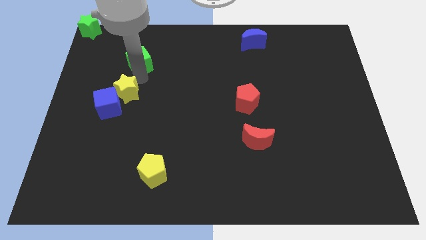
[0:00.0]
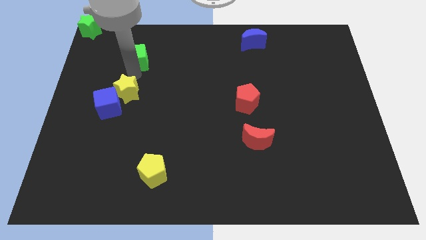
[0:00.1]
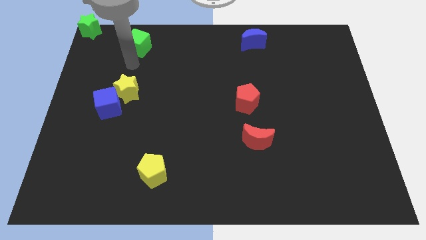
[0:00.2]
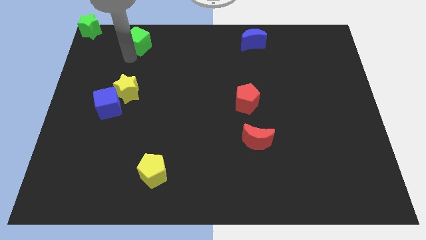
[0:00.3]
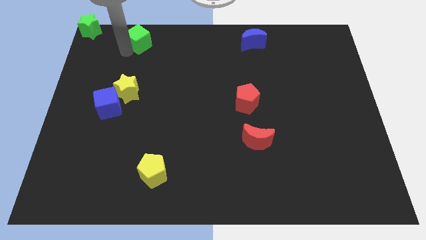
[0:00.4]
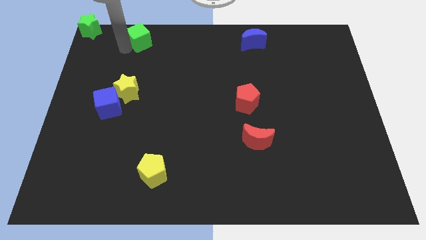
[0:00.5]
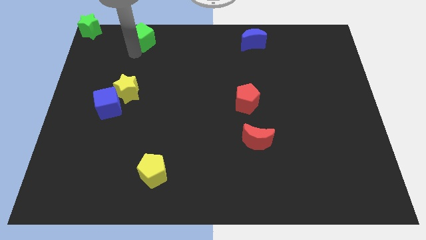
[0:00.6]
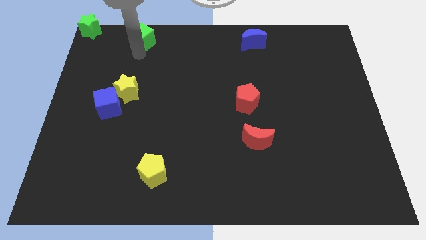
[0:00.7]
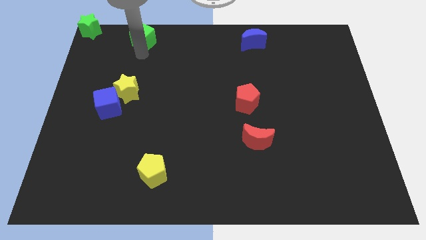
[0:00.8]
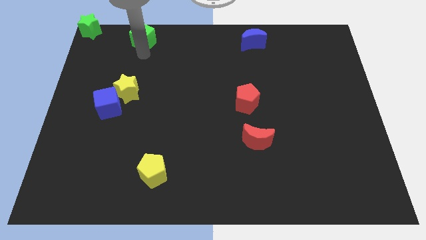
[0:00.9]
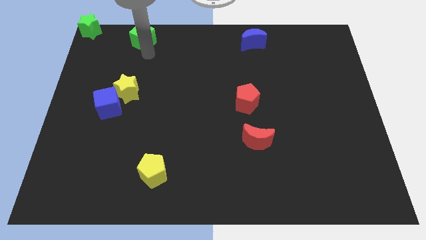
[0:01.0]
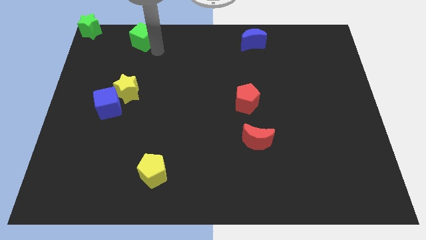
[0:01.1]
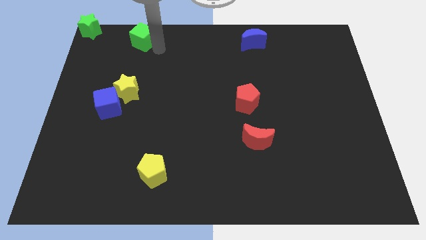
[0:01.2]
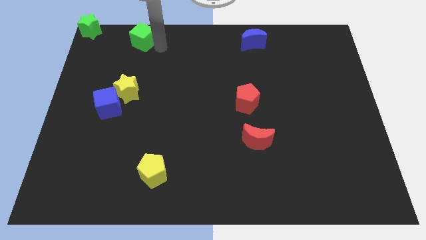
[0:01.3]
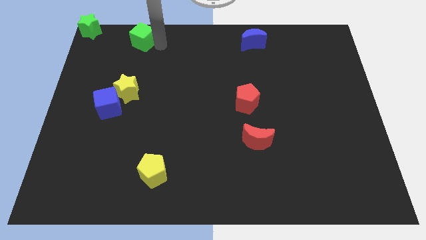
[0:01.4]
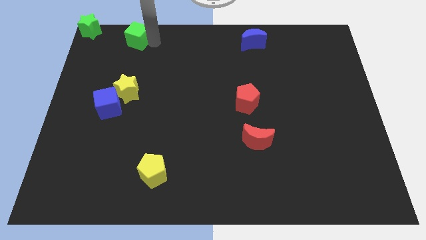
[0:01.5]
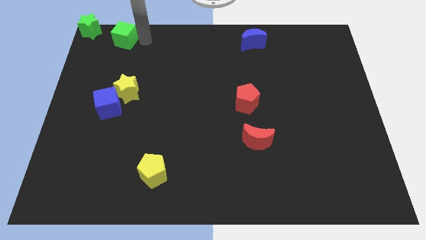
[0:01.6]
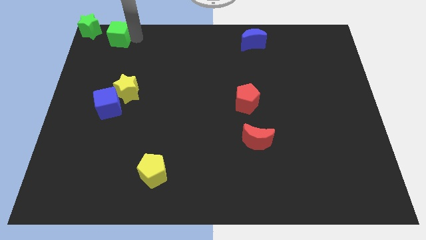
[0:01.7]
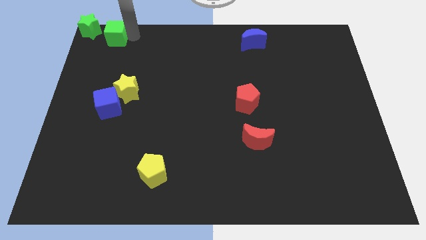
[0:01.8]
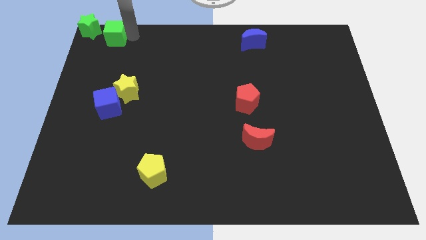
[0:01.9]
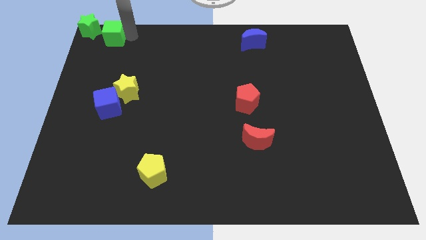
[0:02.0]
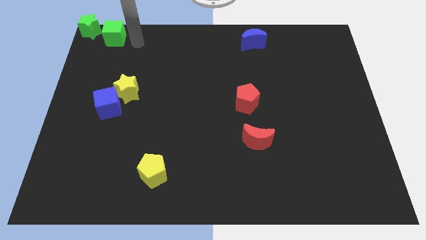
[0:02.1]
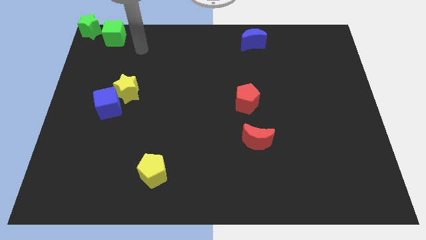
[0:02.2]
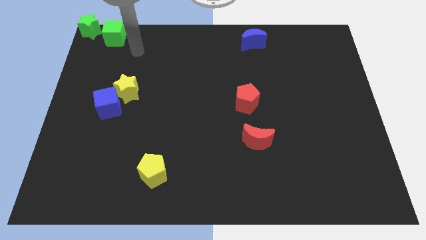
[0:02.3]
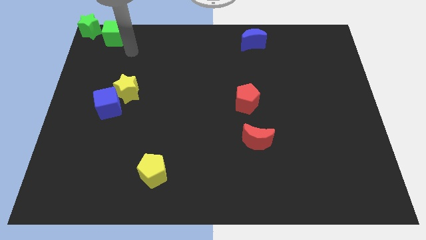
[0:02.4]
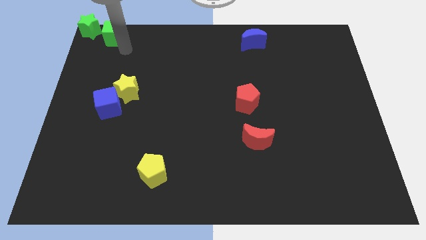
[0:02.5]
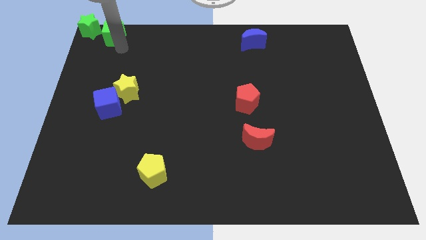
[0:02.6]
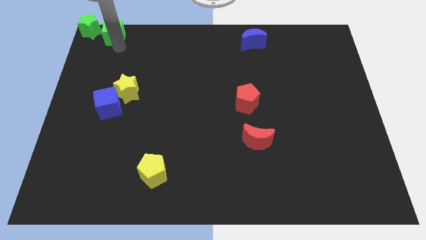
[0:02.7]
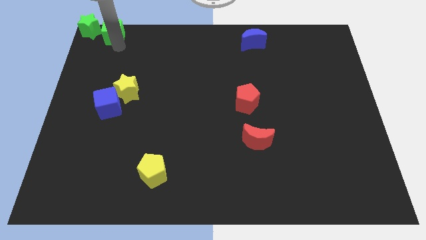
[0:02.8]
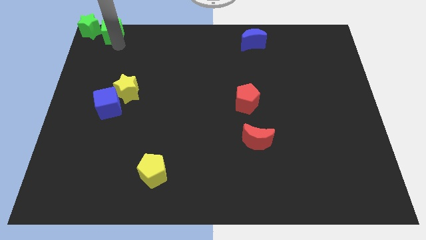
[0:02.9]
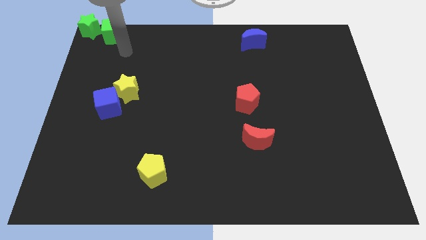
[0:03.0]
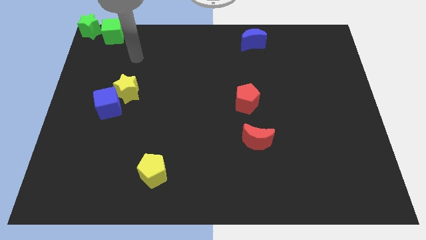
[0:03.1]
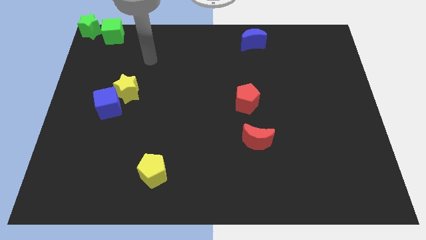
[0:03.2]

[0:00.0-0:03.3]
push the green cube to the right of green star

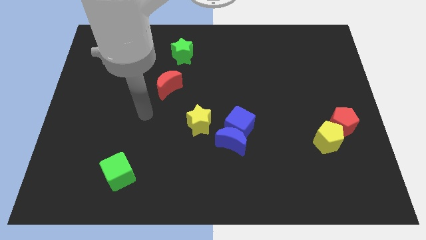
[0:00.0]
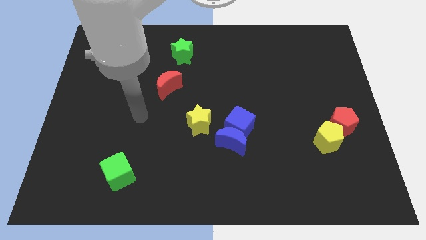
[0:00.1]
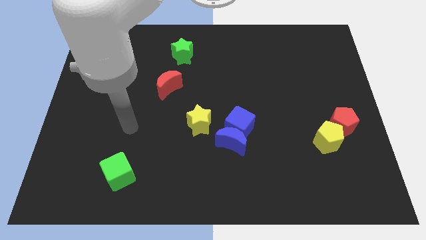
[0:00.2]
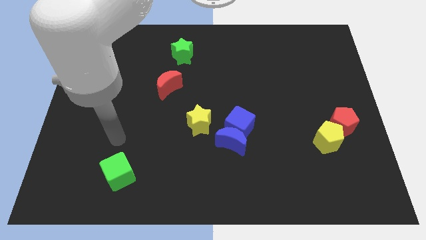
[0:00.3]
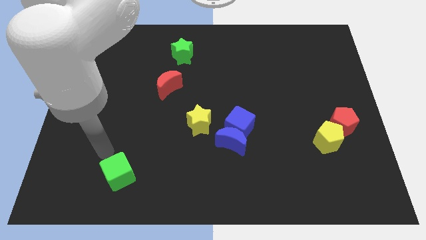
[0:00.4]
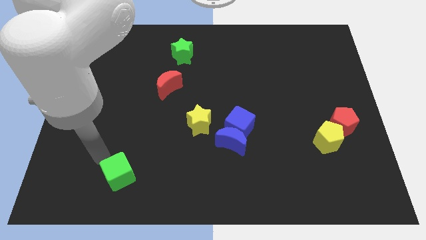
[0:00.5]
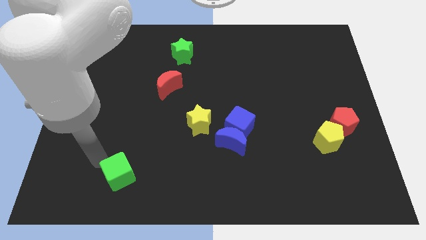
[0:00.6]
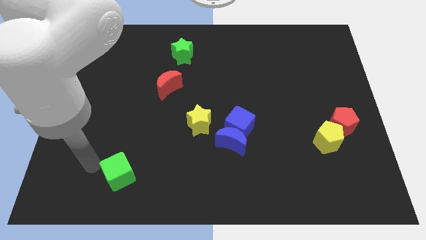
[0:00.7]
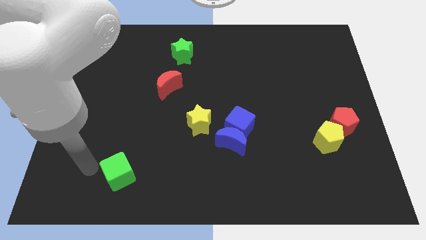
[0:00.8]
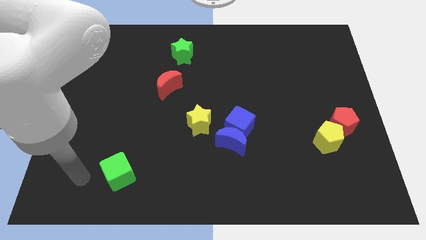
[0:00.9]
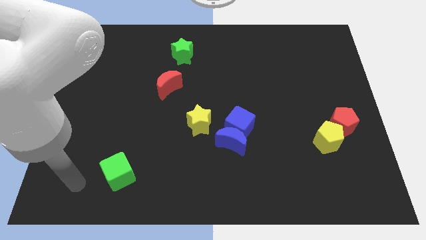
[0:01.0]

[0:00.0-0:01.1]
point your arm at the left of the green cube

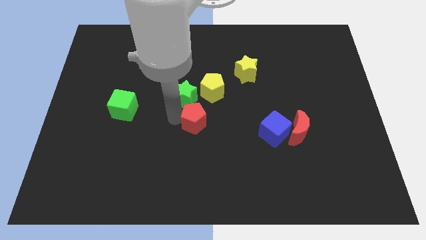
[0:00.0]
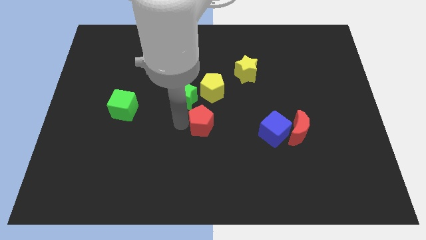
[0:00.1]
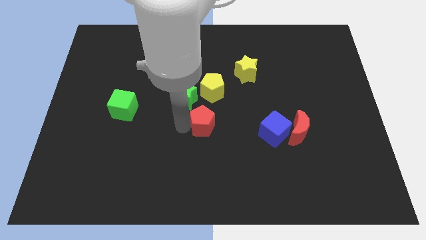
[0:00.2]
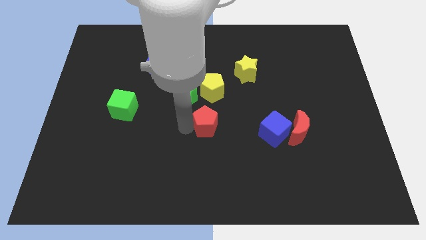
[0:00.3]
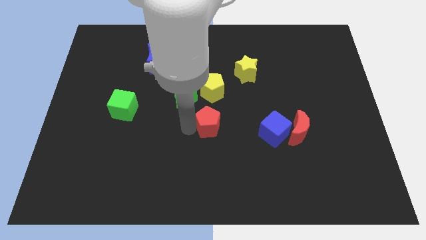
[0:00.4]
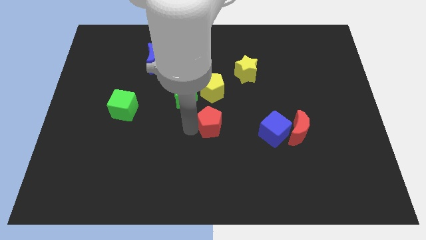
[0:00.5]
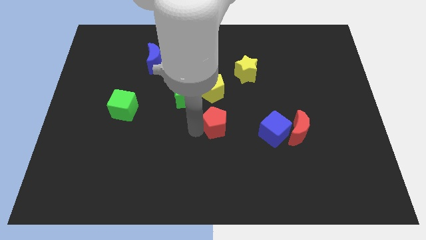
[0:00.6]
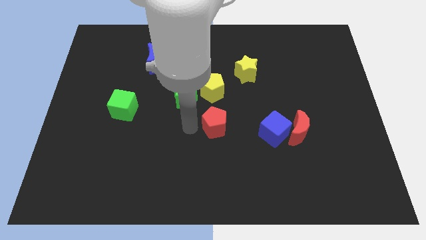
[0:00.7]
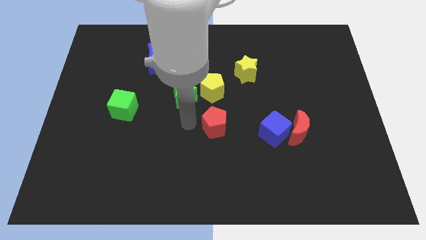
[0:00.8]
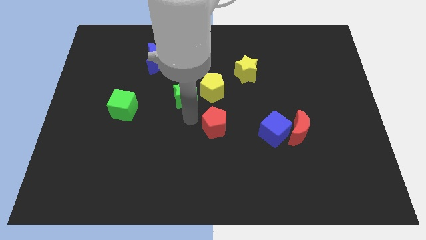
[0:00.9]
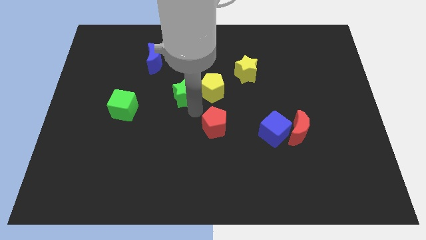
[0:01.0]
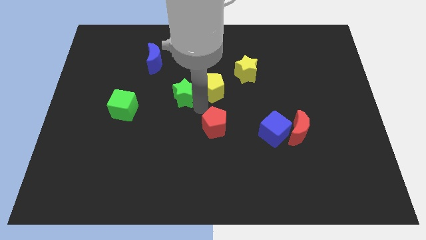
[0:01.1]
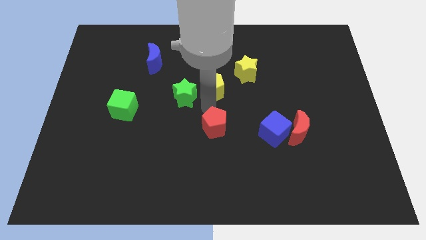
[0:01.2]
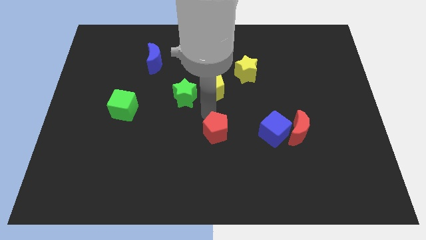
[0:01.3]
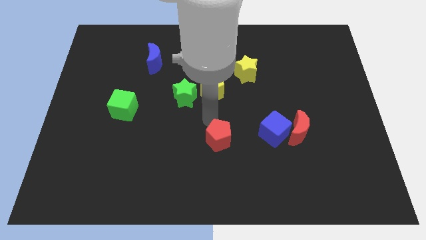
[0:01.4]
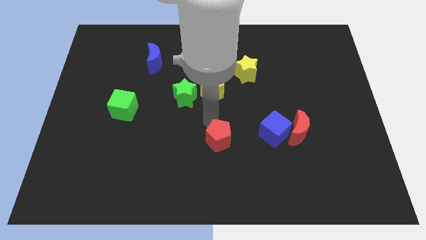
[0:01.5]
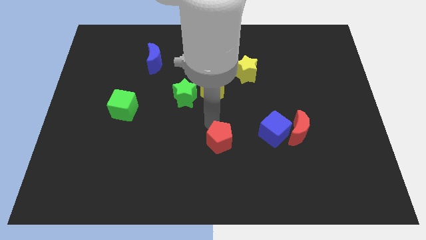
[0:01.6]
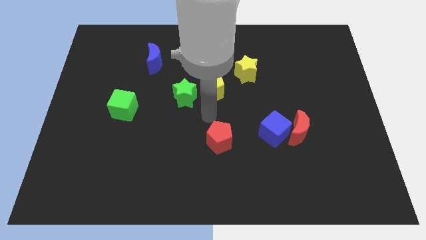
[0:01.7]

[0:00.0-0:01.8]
place red pentagon below yellow pentagon

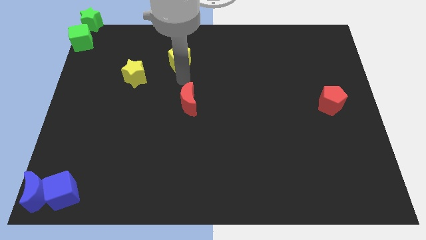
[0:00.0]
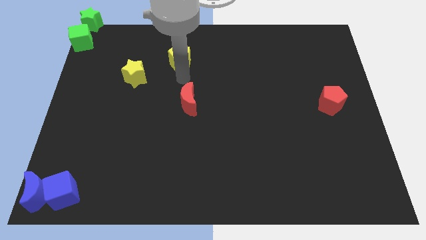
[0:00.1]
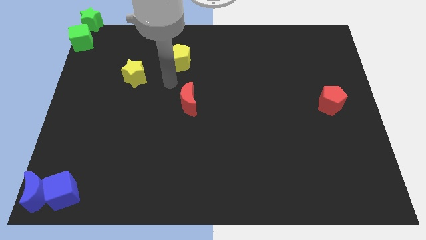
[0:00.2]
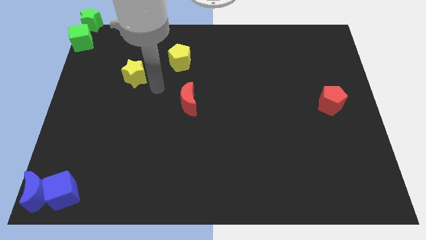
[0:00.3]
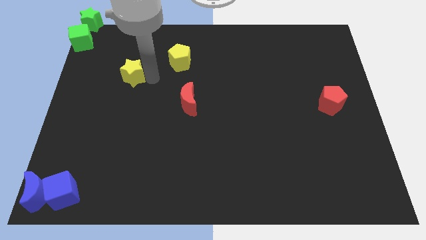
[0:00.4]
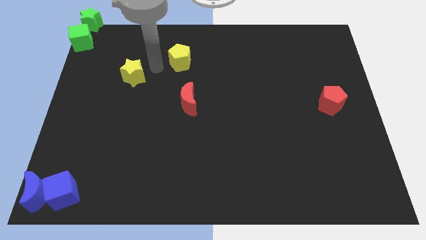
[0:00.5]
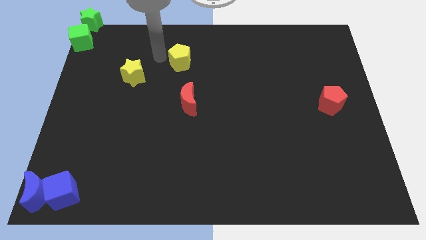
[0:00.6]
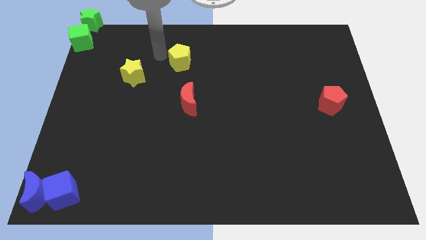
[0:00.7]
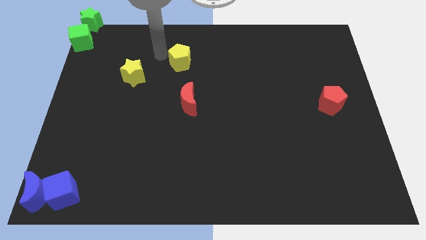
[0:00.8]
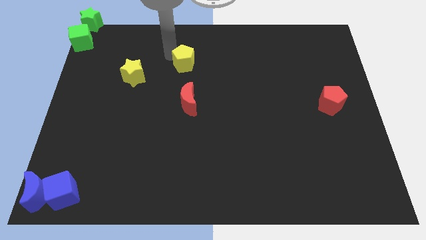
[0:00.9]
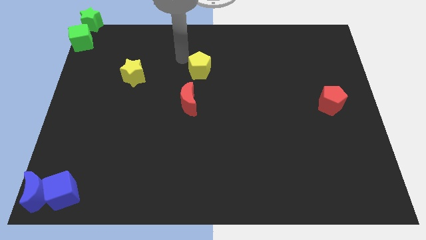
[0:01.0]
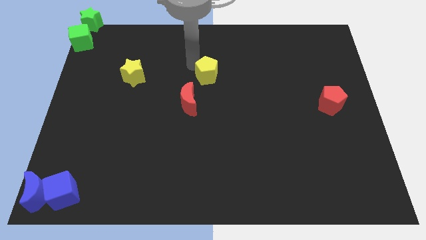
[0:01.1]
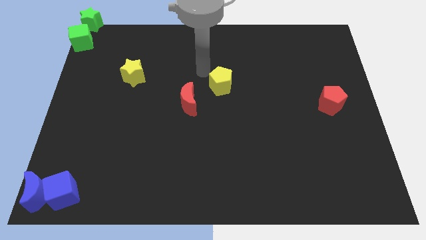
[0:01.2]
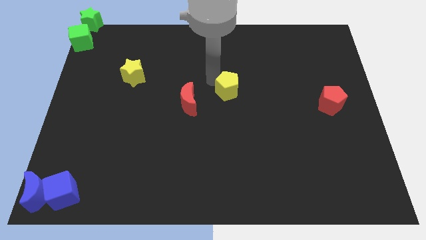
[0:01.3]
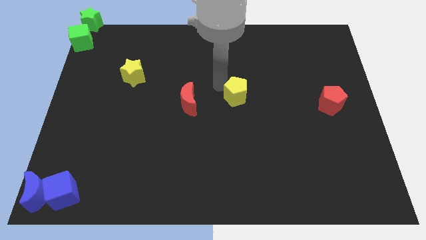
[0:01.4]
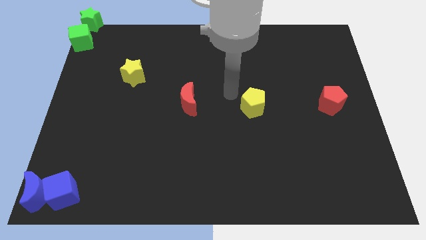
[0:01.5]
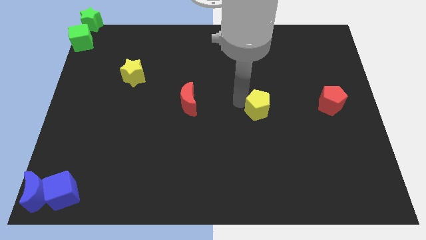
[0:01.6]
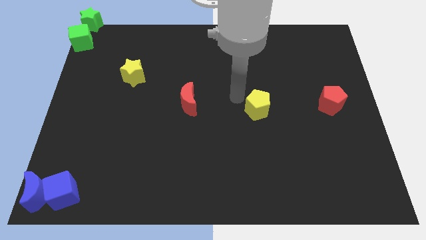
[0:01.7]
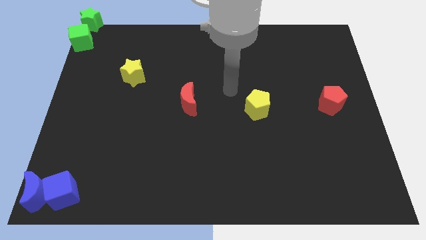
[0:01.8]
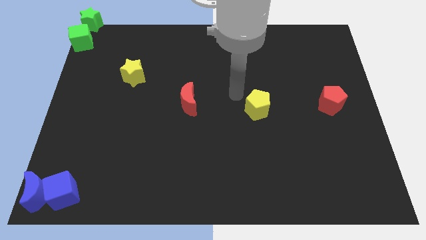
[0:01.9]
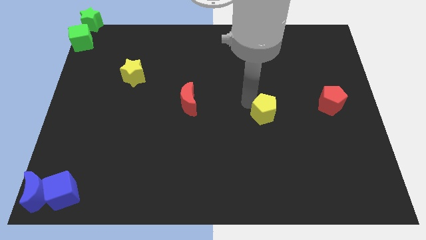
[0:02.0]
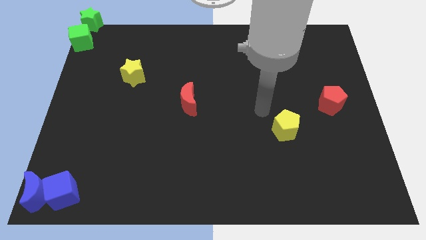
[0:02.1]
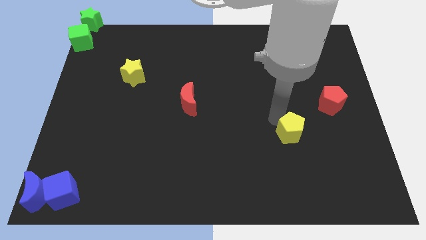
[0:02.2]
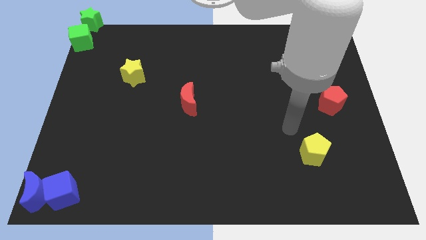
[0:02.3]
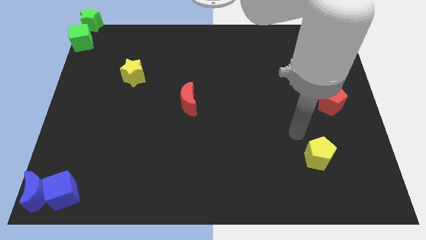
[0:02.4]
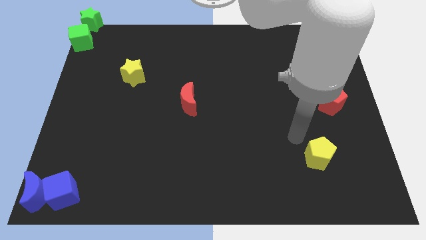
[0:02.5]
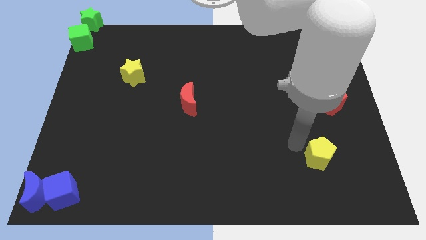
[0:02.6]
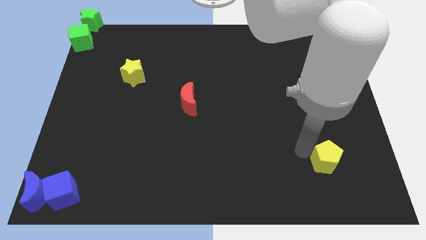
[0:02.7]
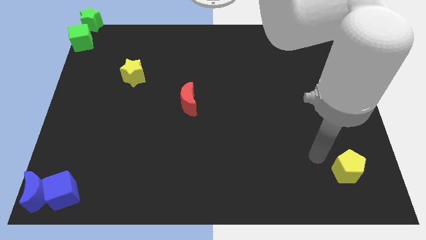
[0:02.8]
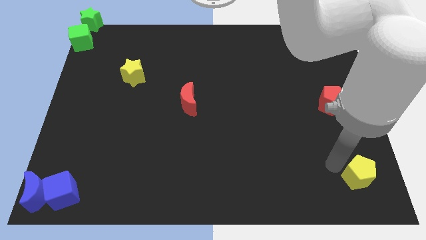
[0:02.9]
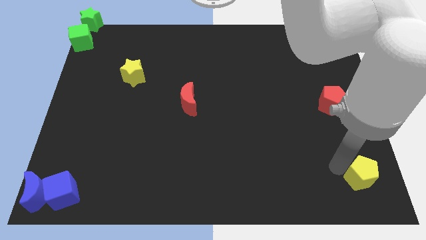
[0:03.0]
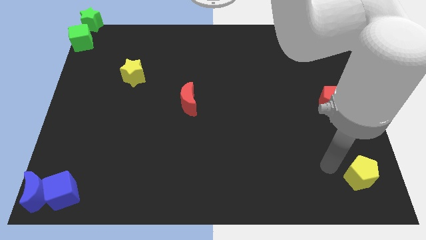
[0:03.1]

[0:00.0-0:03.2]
push the yellow pentagon towards the bottom right of the board
